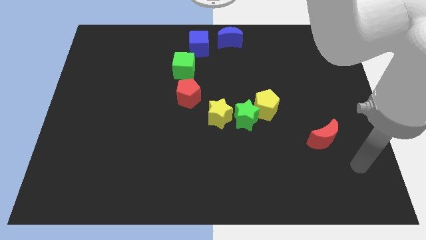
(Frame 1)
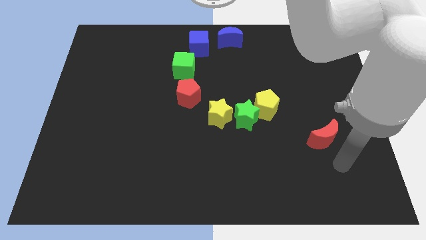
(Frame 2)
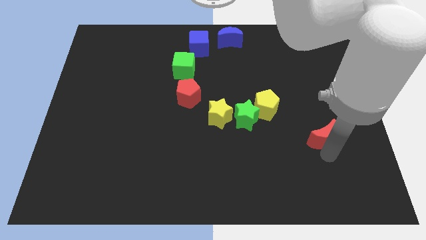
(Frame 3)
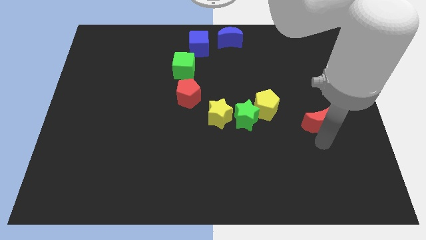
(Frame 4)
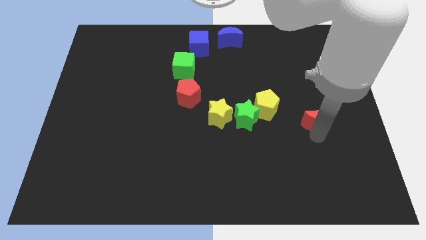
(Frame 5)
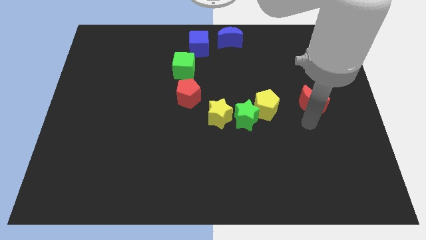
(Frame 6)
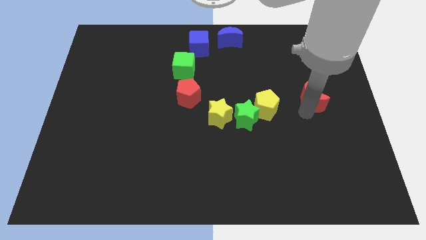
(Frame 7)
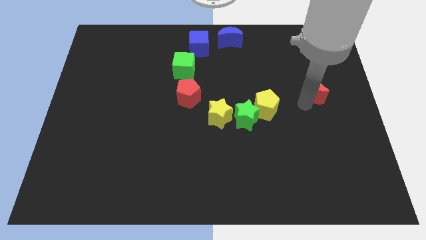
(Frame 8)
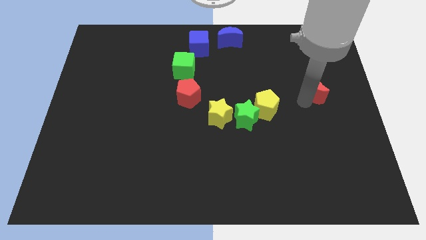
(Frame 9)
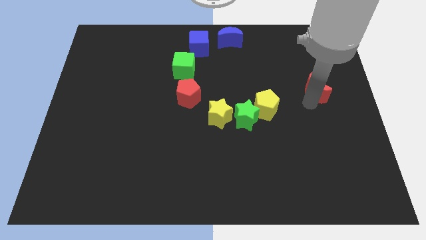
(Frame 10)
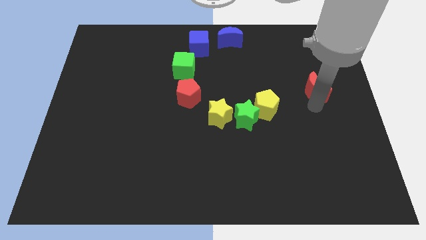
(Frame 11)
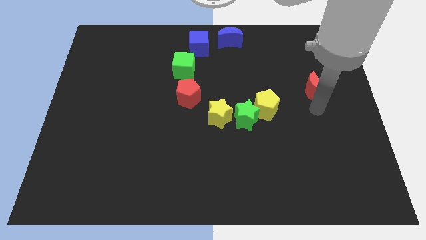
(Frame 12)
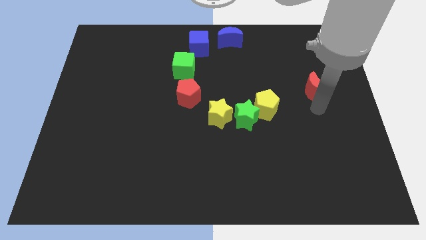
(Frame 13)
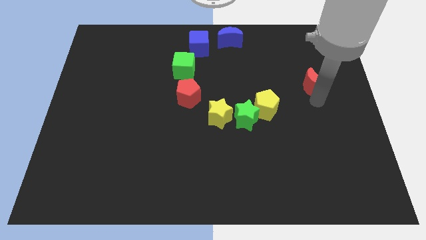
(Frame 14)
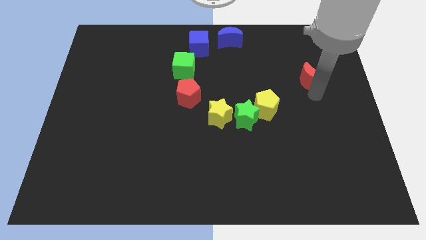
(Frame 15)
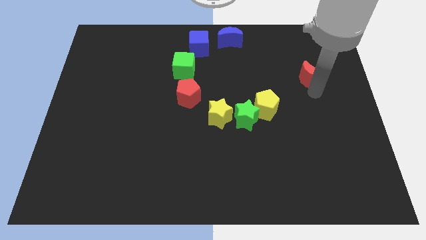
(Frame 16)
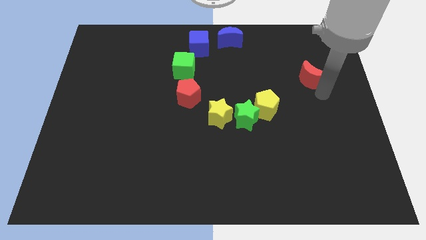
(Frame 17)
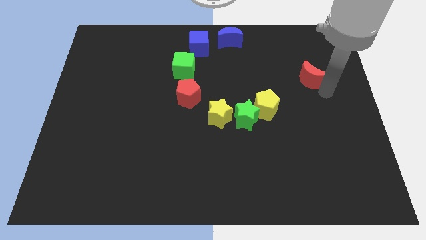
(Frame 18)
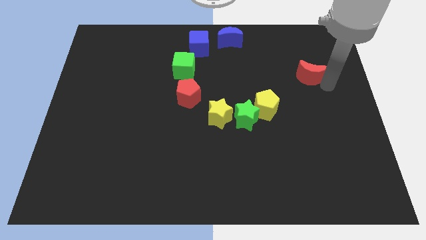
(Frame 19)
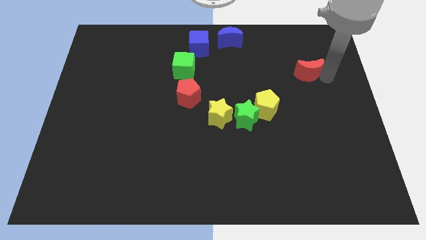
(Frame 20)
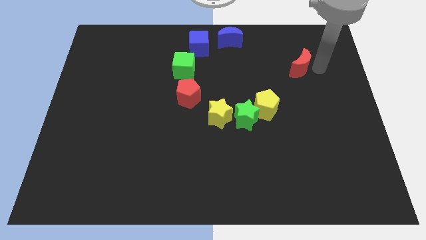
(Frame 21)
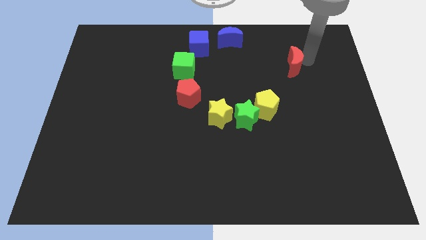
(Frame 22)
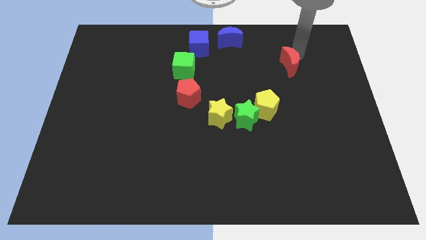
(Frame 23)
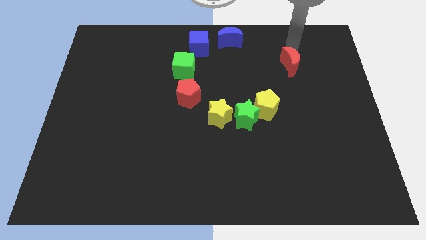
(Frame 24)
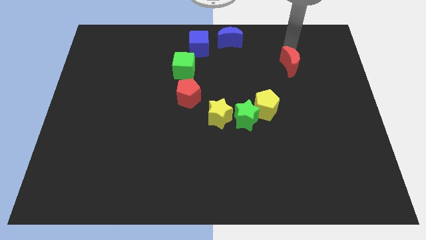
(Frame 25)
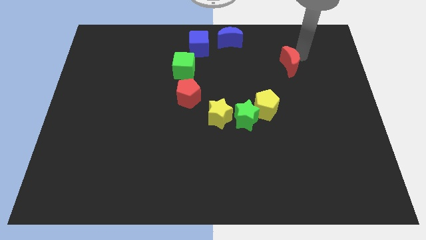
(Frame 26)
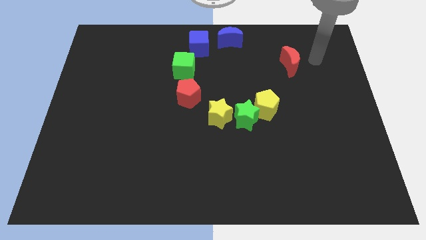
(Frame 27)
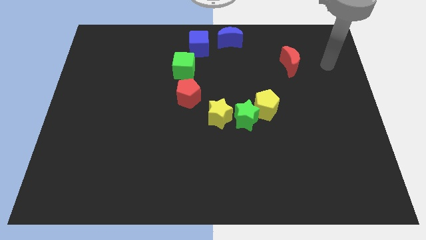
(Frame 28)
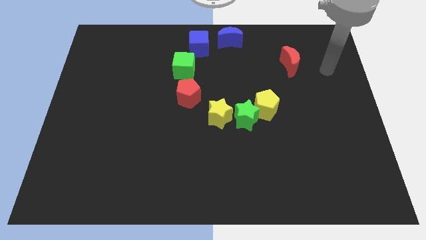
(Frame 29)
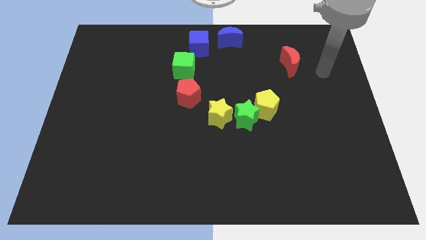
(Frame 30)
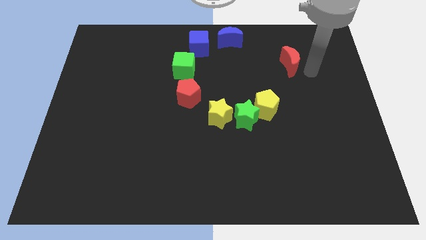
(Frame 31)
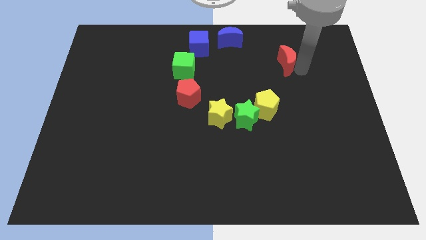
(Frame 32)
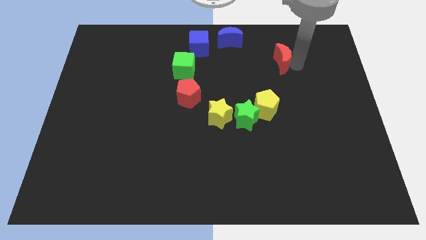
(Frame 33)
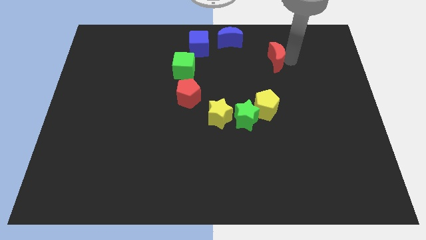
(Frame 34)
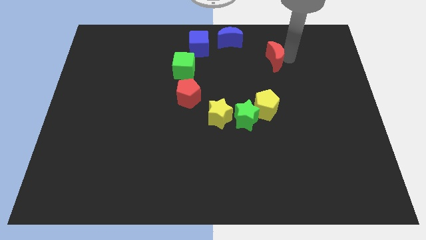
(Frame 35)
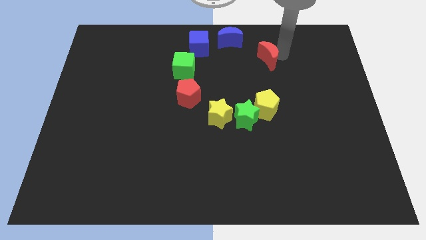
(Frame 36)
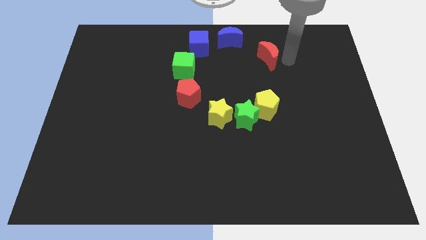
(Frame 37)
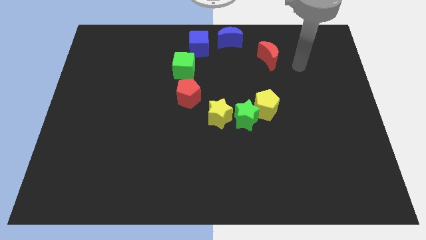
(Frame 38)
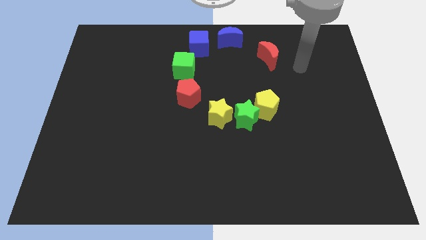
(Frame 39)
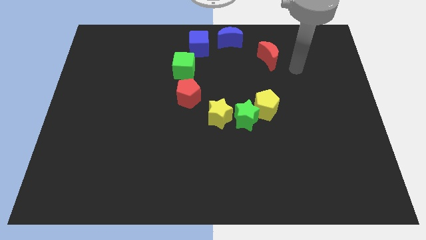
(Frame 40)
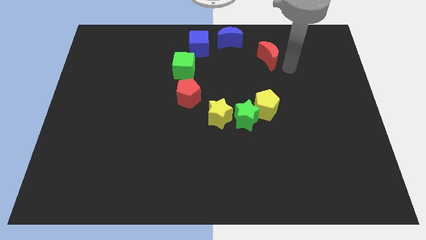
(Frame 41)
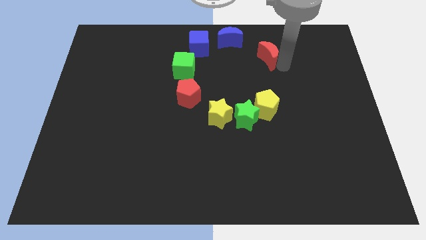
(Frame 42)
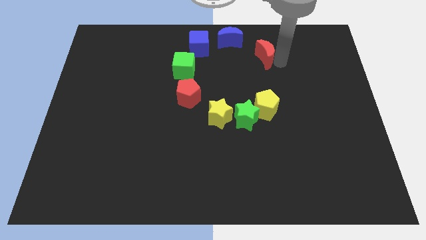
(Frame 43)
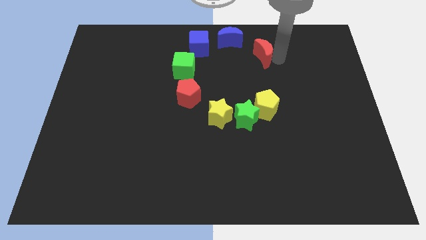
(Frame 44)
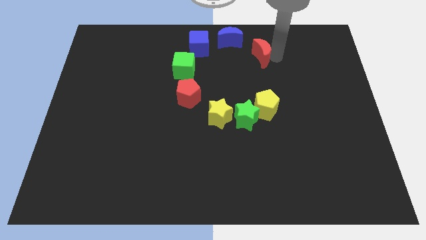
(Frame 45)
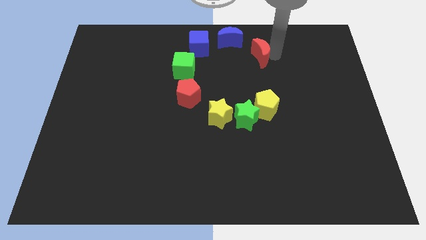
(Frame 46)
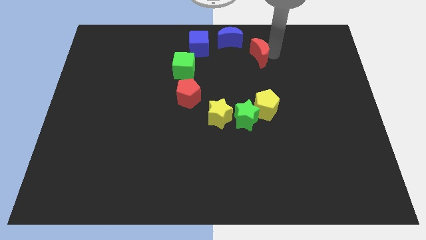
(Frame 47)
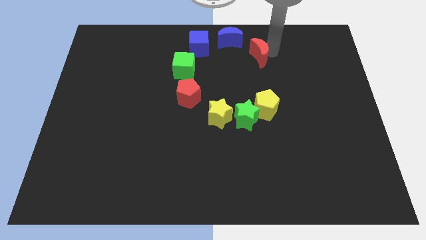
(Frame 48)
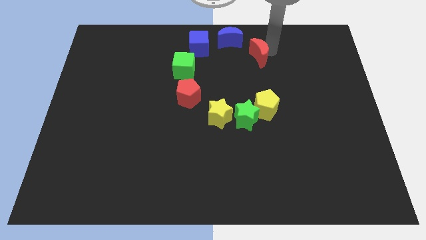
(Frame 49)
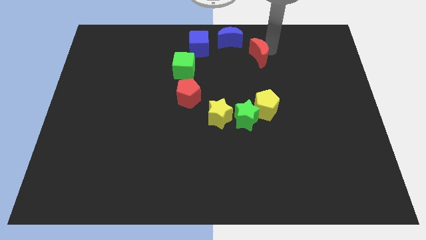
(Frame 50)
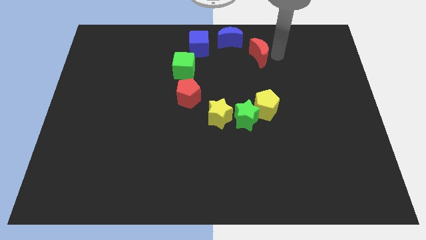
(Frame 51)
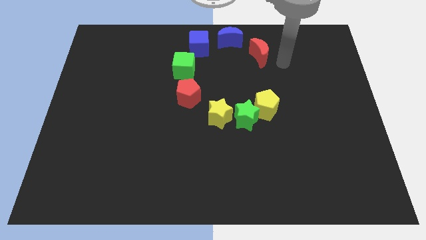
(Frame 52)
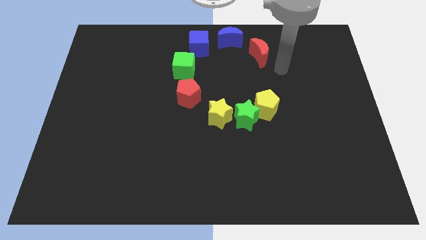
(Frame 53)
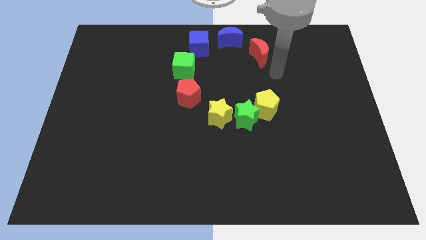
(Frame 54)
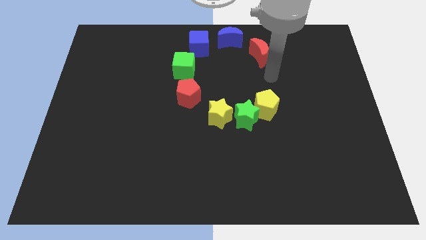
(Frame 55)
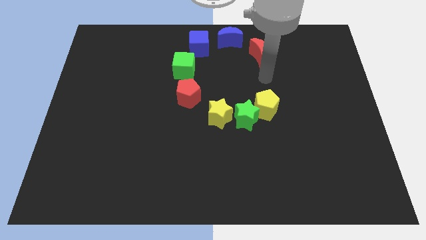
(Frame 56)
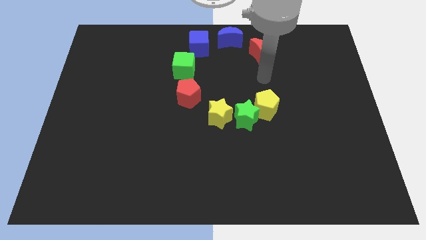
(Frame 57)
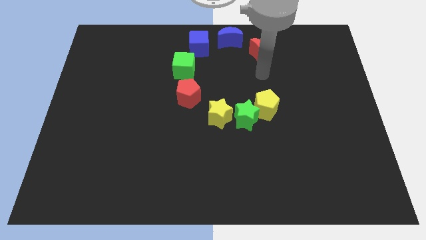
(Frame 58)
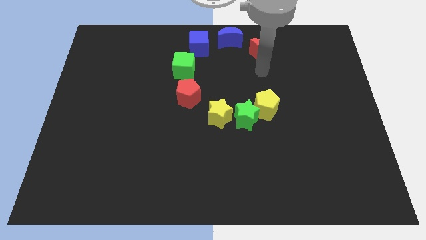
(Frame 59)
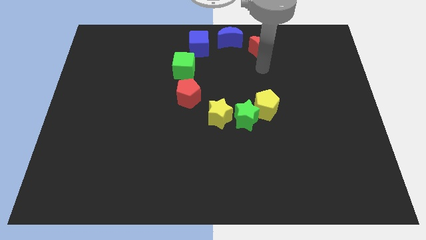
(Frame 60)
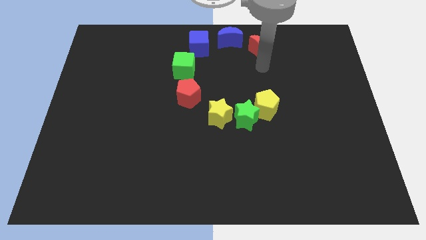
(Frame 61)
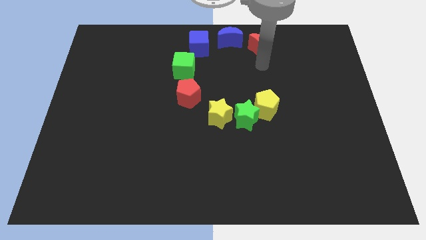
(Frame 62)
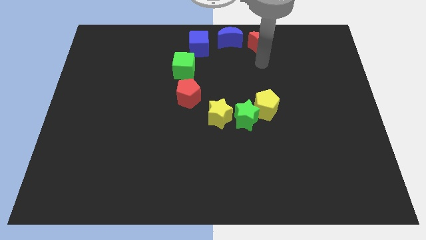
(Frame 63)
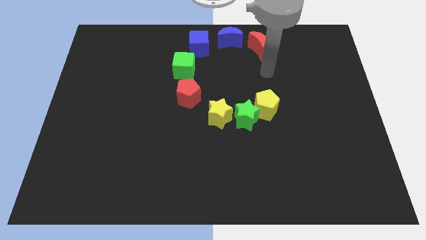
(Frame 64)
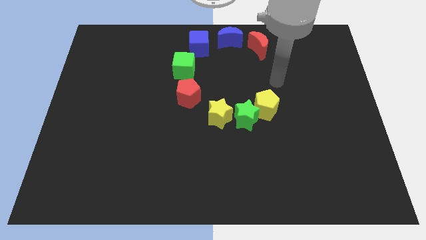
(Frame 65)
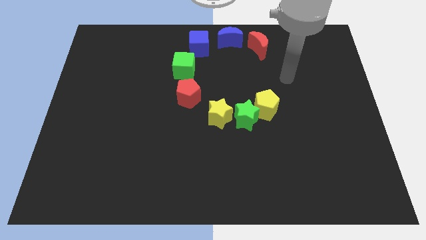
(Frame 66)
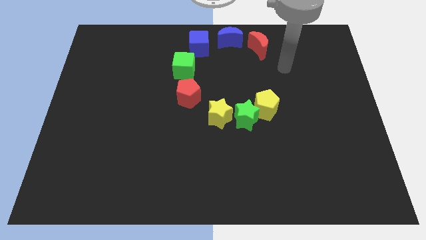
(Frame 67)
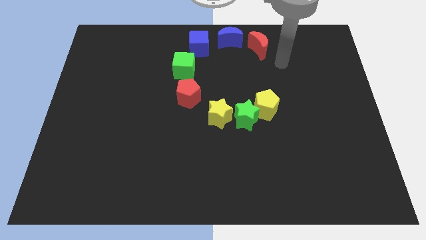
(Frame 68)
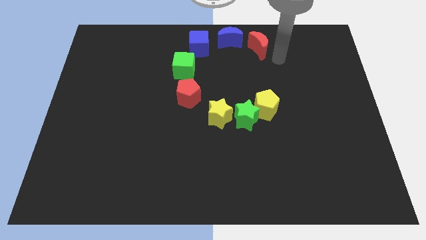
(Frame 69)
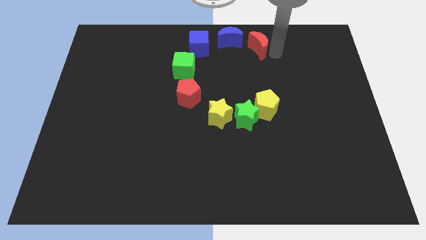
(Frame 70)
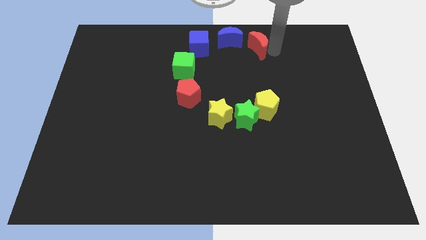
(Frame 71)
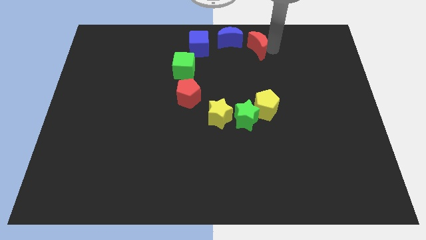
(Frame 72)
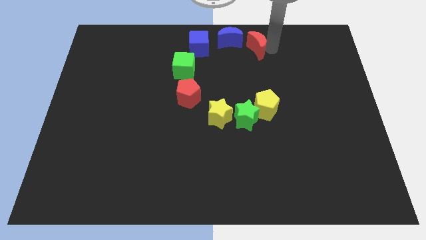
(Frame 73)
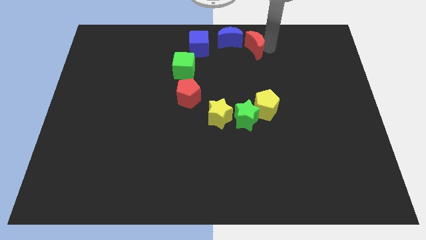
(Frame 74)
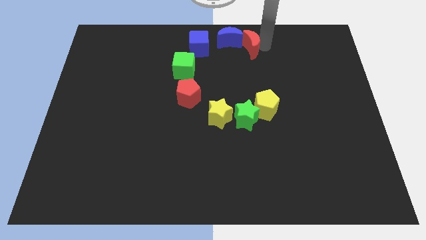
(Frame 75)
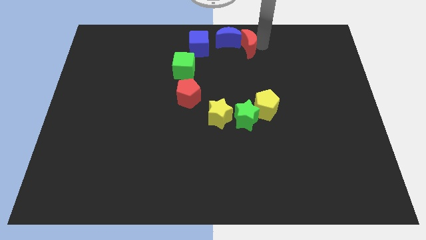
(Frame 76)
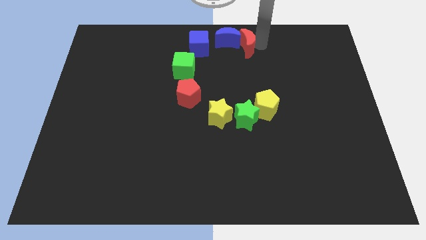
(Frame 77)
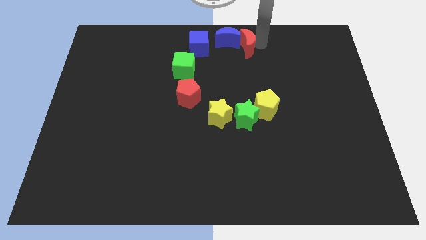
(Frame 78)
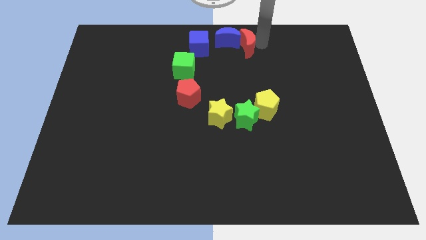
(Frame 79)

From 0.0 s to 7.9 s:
place the red moon to the right side of blue moon

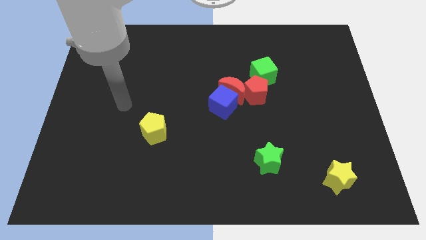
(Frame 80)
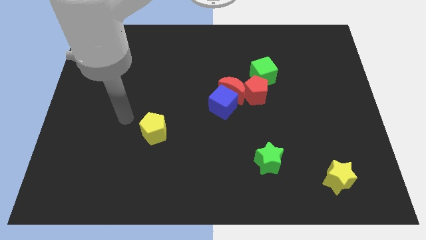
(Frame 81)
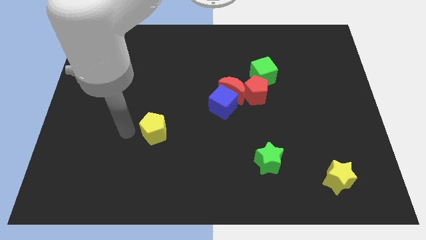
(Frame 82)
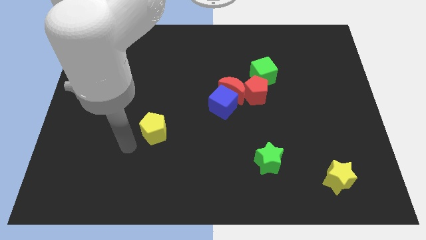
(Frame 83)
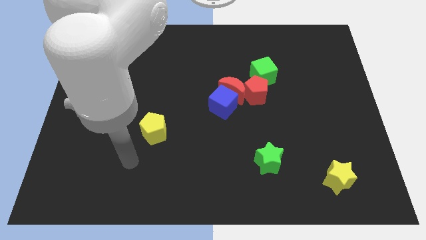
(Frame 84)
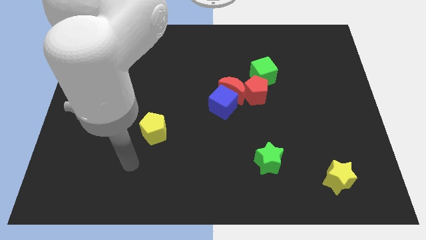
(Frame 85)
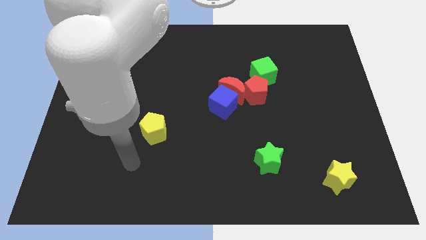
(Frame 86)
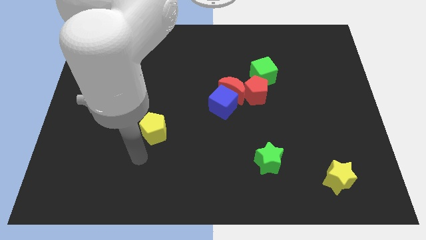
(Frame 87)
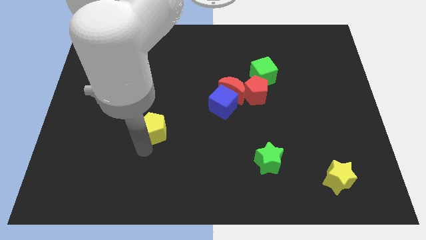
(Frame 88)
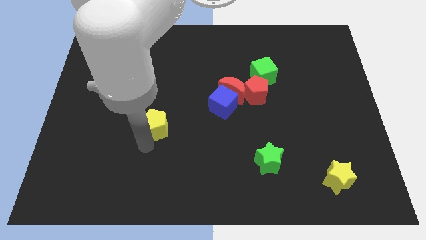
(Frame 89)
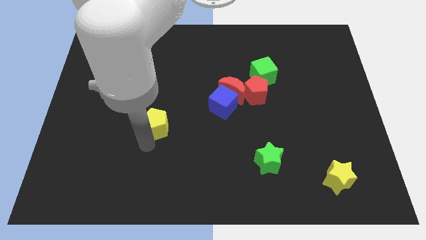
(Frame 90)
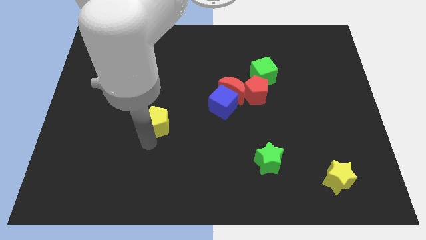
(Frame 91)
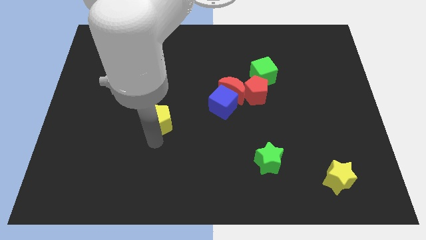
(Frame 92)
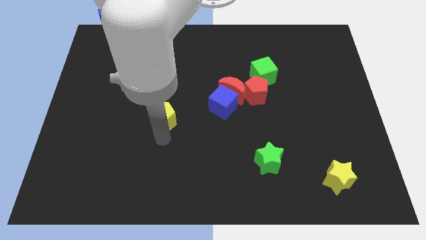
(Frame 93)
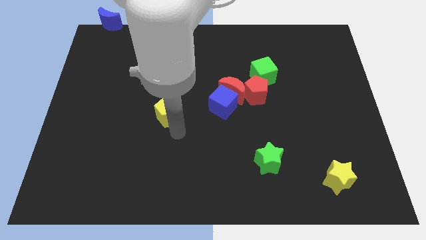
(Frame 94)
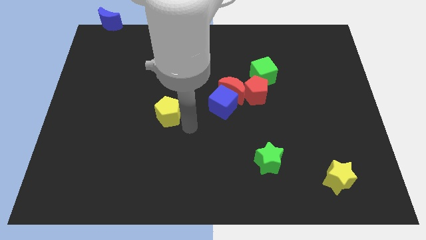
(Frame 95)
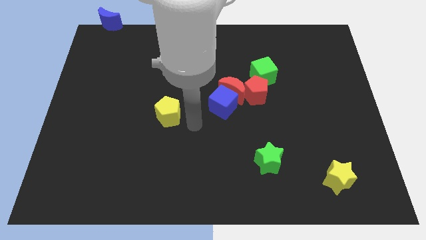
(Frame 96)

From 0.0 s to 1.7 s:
slightly push the yellow pentagon towards the center of the board
